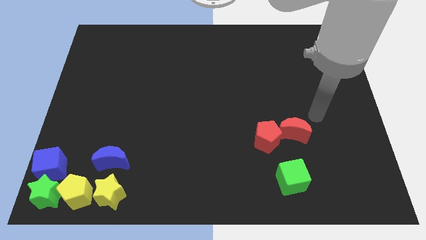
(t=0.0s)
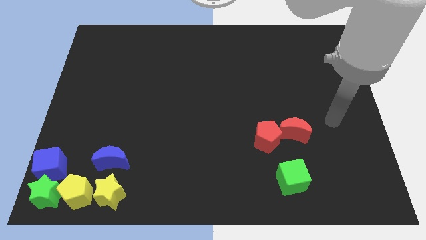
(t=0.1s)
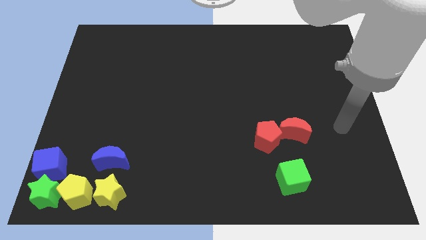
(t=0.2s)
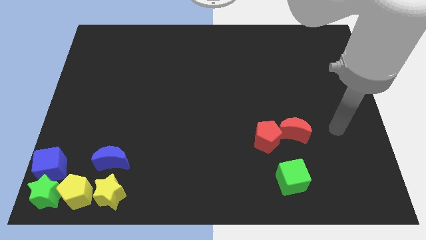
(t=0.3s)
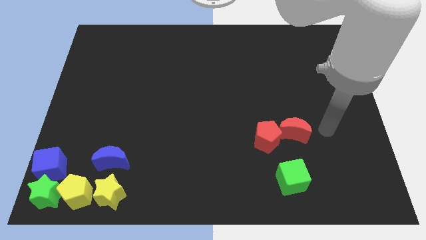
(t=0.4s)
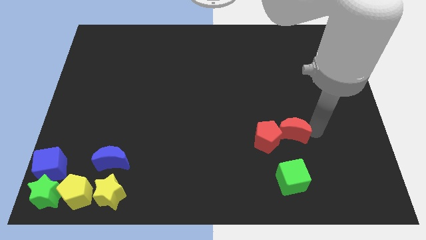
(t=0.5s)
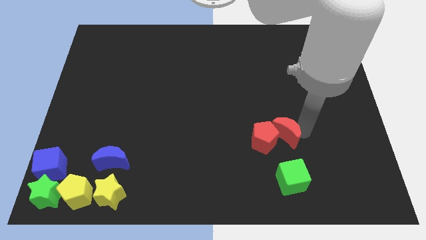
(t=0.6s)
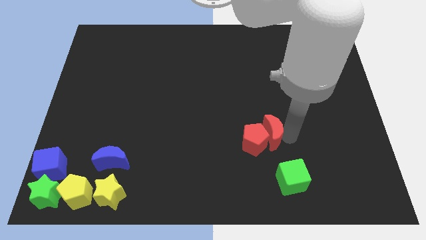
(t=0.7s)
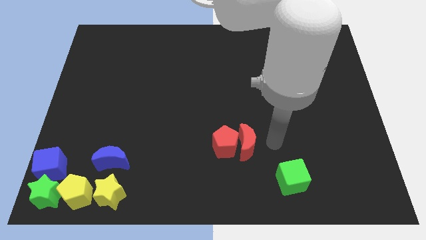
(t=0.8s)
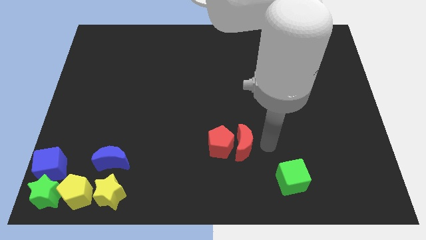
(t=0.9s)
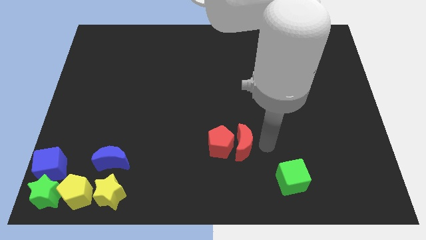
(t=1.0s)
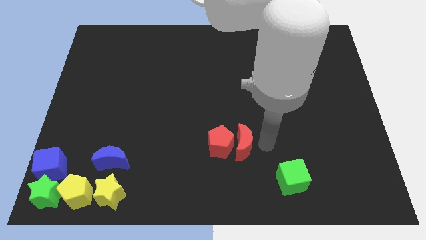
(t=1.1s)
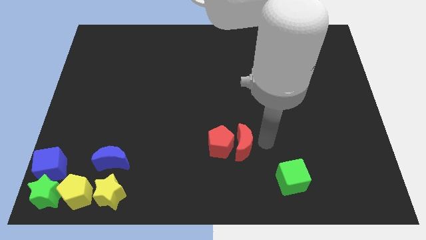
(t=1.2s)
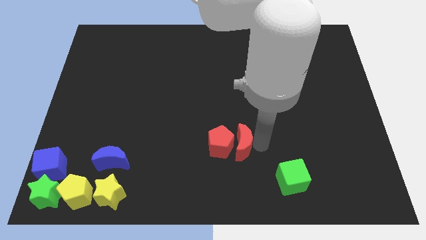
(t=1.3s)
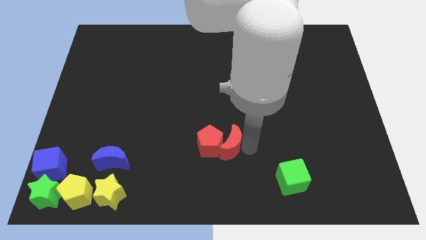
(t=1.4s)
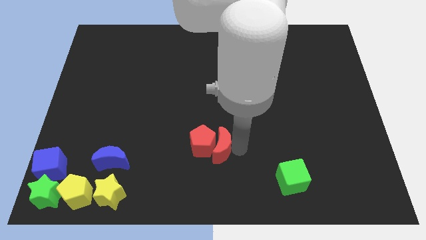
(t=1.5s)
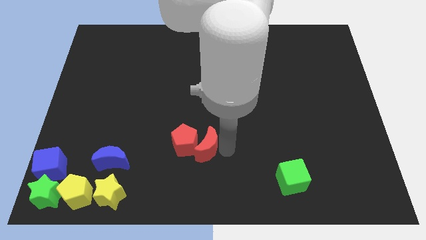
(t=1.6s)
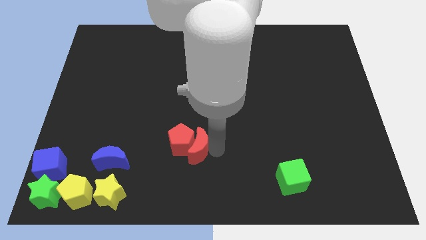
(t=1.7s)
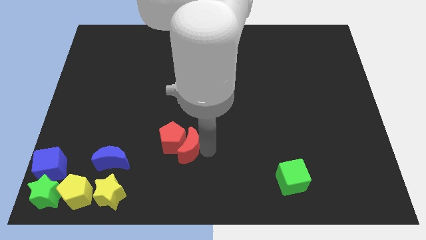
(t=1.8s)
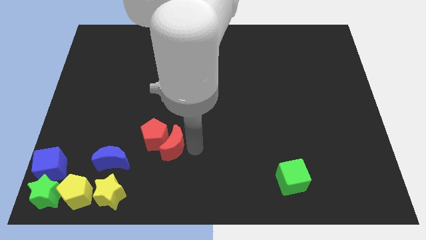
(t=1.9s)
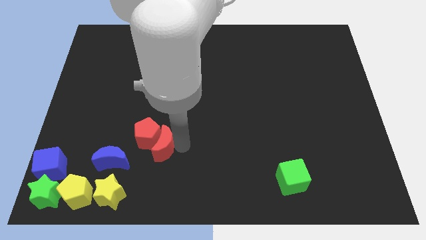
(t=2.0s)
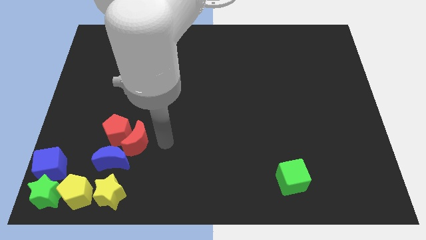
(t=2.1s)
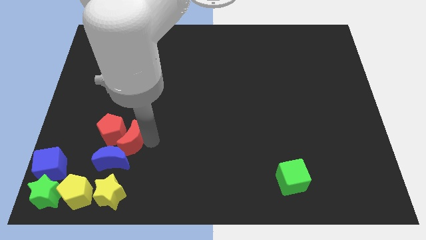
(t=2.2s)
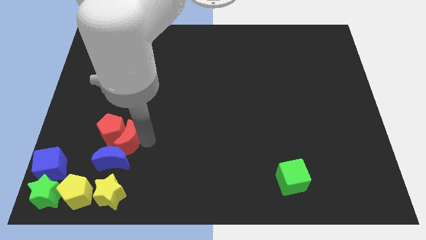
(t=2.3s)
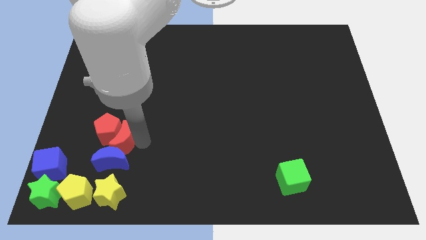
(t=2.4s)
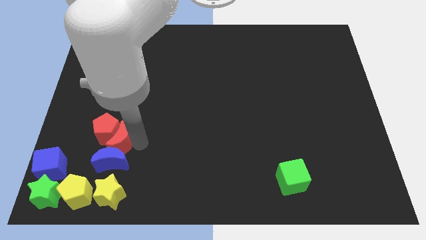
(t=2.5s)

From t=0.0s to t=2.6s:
push red crescent above blue crescent

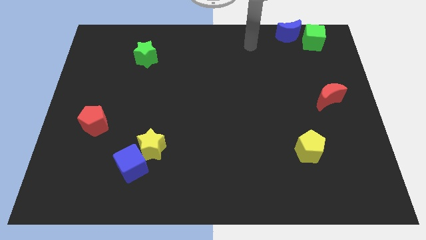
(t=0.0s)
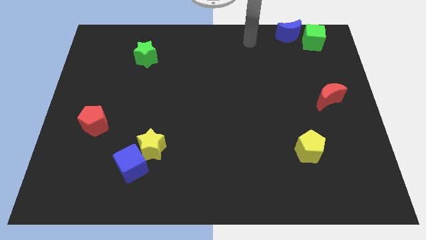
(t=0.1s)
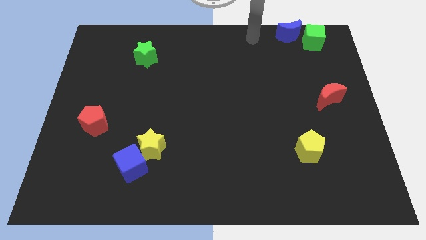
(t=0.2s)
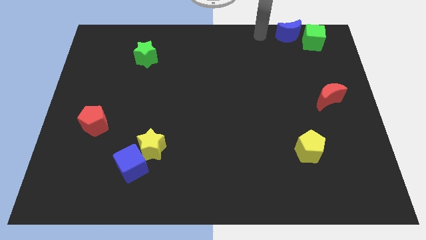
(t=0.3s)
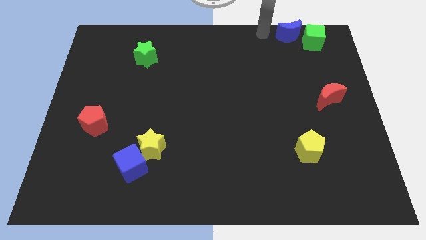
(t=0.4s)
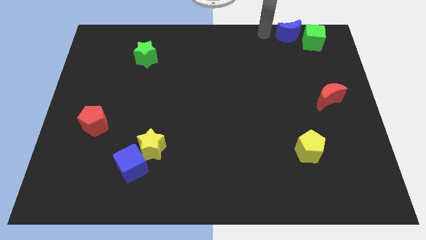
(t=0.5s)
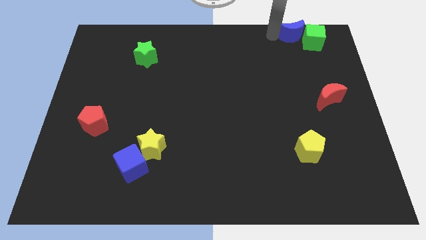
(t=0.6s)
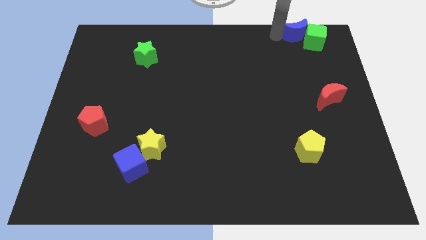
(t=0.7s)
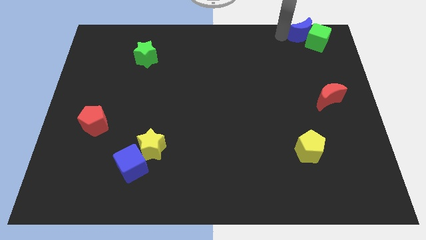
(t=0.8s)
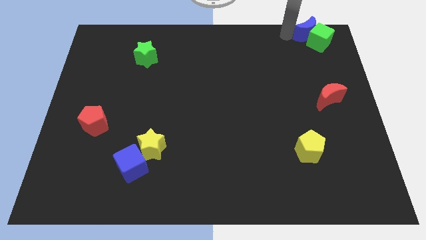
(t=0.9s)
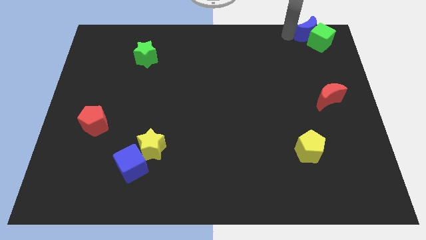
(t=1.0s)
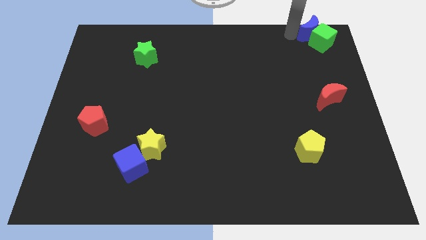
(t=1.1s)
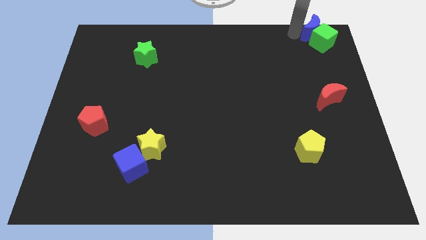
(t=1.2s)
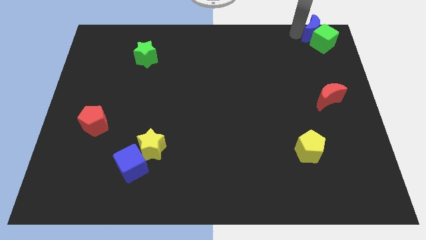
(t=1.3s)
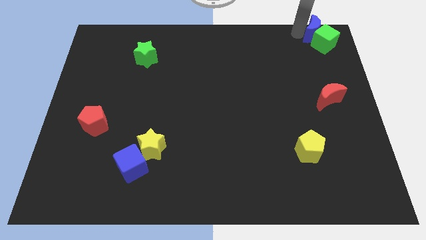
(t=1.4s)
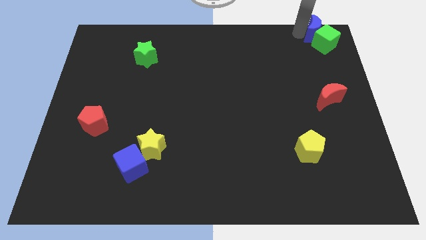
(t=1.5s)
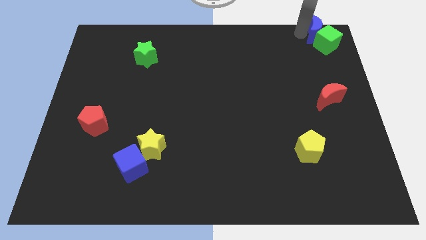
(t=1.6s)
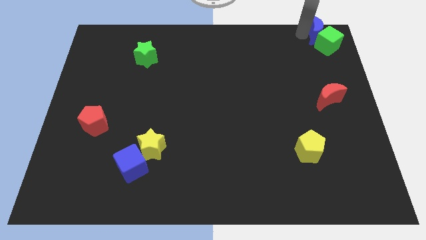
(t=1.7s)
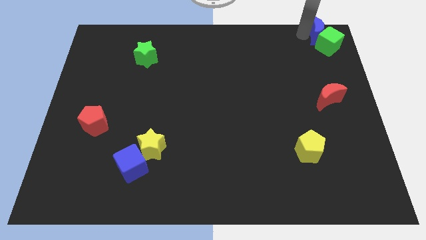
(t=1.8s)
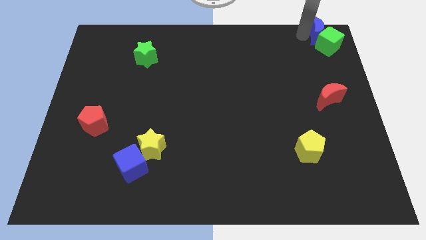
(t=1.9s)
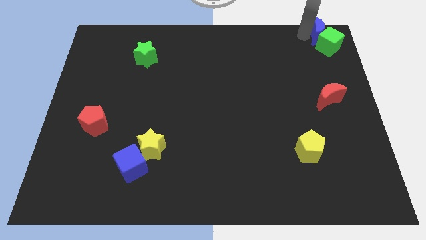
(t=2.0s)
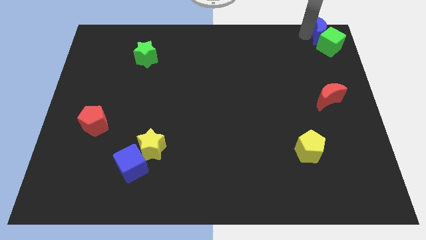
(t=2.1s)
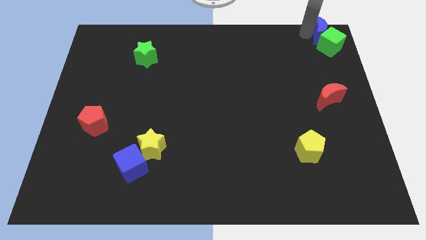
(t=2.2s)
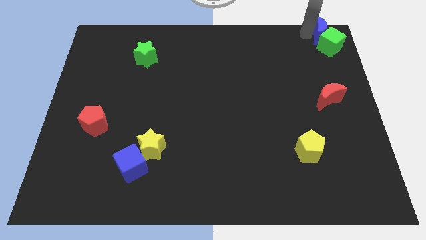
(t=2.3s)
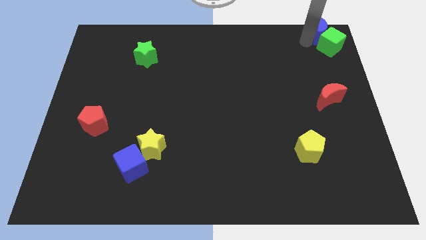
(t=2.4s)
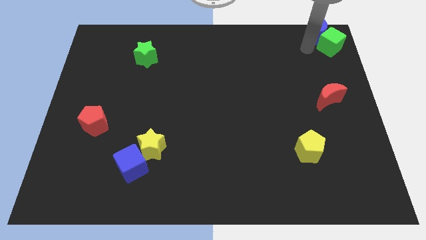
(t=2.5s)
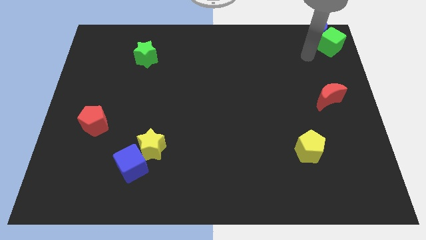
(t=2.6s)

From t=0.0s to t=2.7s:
move blue crescent along with green cube to the top right corner

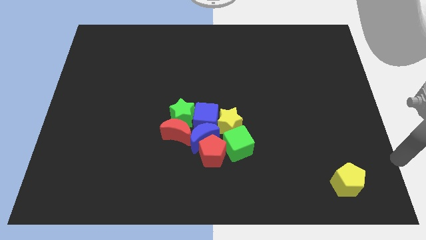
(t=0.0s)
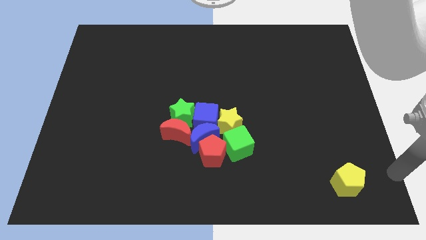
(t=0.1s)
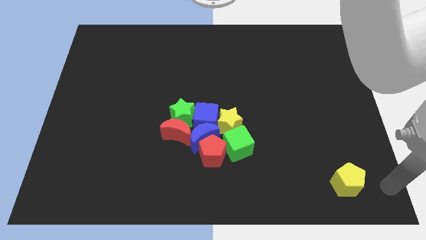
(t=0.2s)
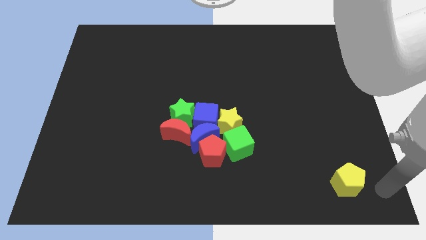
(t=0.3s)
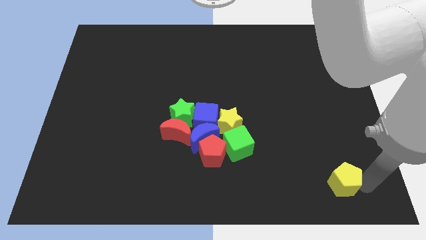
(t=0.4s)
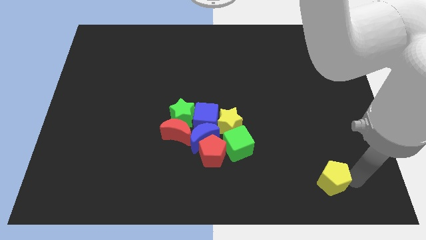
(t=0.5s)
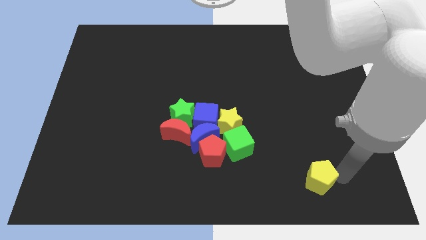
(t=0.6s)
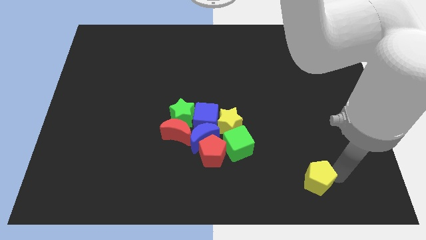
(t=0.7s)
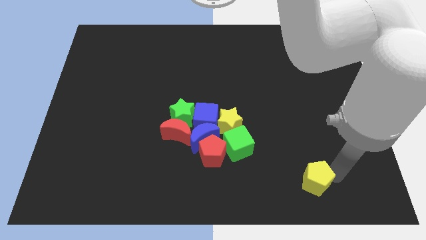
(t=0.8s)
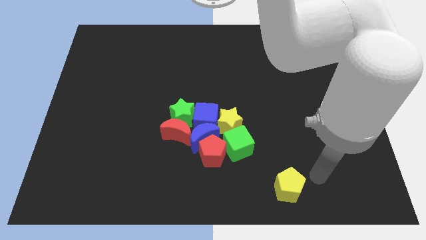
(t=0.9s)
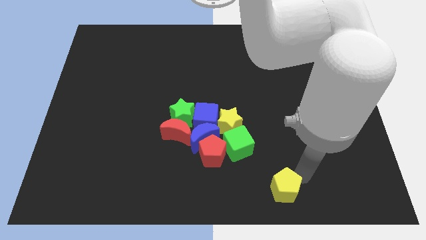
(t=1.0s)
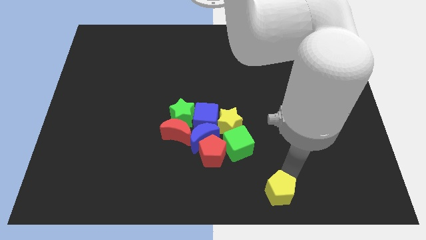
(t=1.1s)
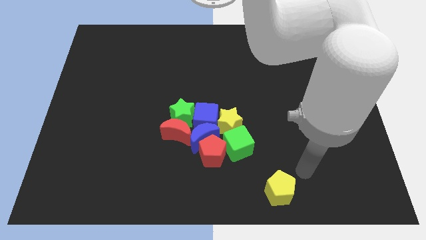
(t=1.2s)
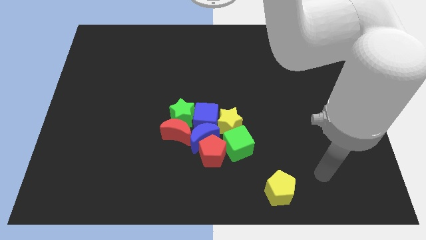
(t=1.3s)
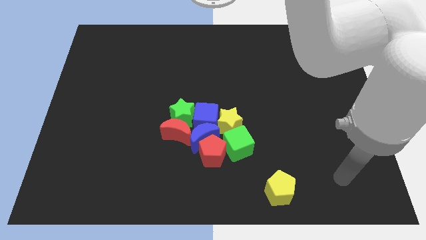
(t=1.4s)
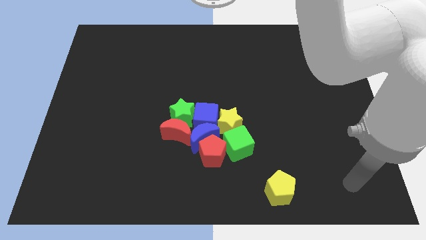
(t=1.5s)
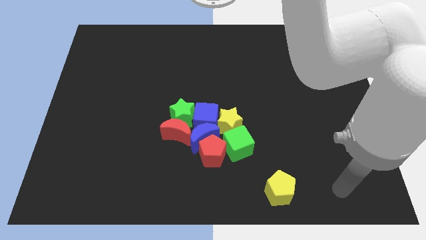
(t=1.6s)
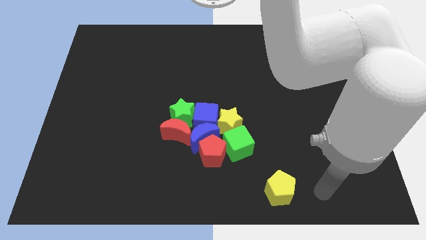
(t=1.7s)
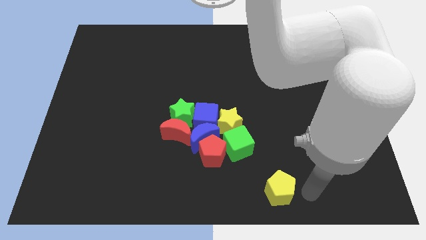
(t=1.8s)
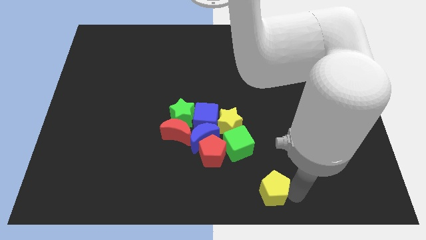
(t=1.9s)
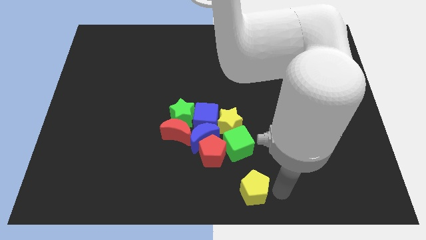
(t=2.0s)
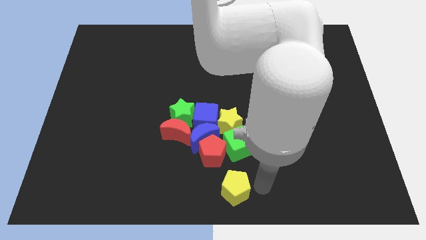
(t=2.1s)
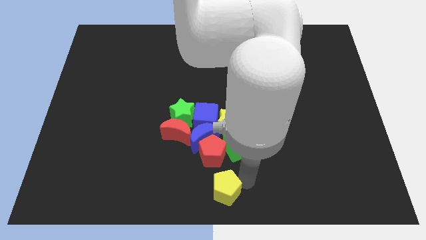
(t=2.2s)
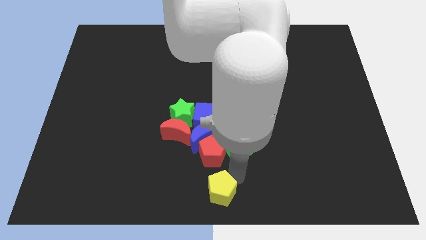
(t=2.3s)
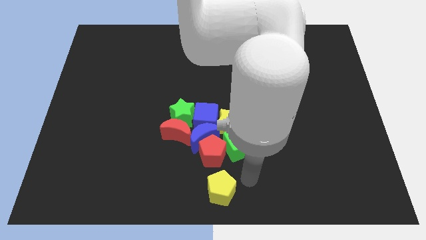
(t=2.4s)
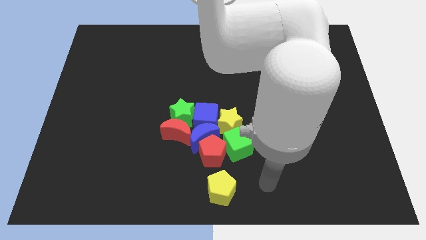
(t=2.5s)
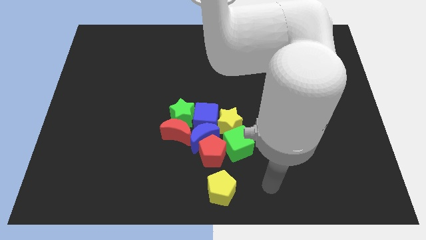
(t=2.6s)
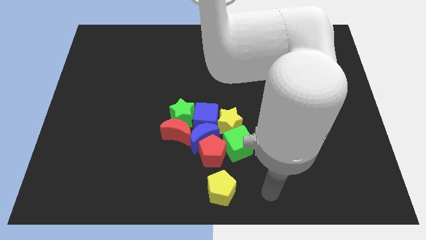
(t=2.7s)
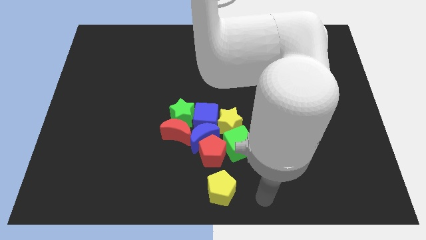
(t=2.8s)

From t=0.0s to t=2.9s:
slide the yellow pentagon under the red pentagon

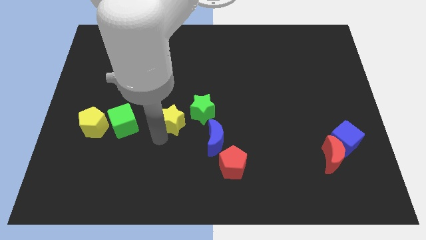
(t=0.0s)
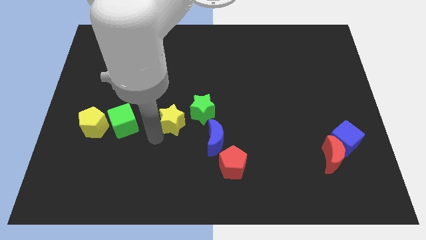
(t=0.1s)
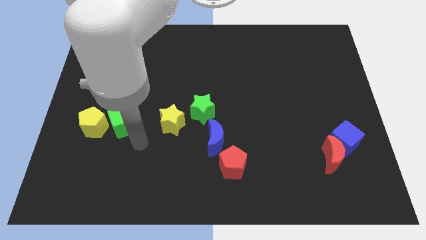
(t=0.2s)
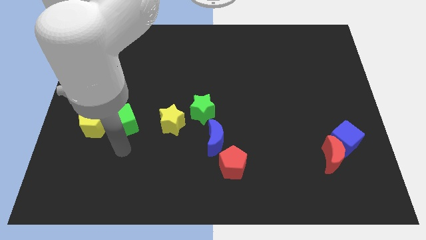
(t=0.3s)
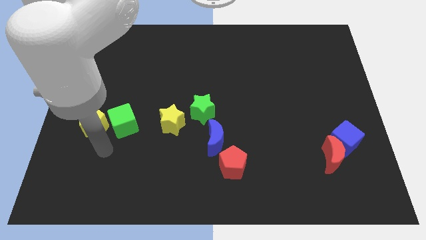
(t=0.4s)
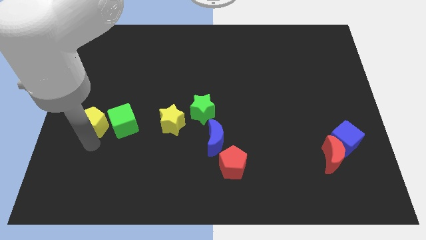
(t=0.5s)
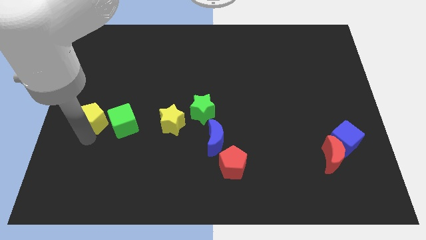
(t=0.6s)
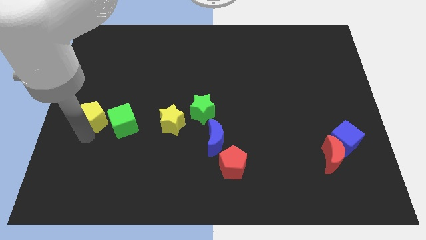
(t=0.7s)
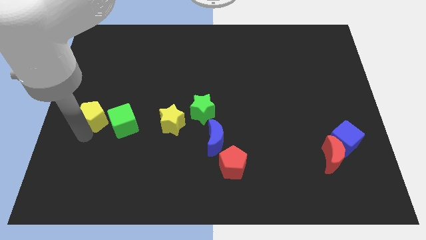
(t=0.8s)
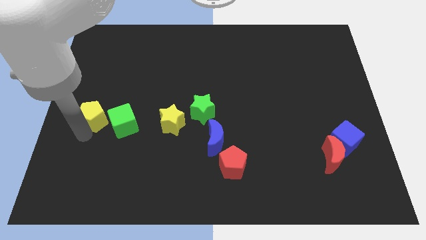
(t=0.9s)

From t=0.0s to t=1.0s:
move yellow pentagon slightly up
